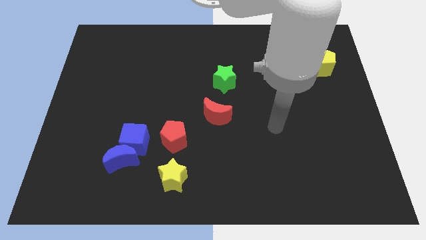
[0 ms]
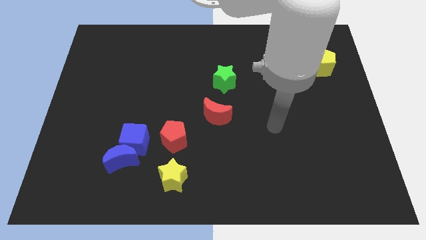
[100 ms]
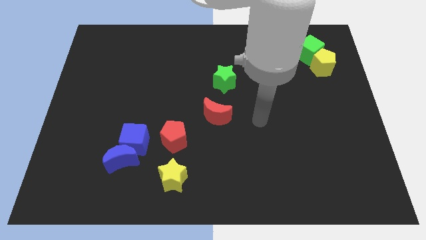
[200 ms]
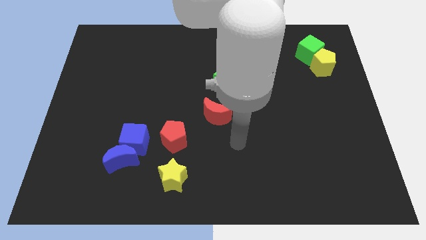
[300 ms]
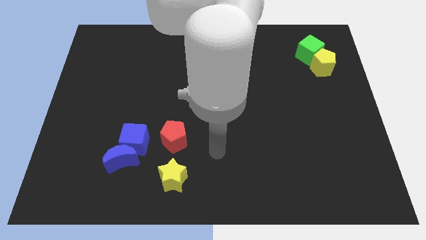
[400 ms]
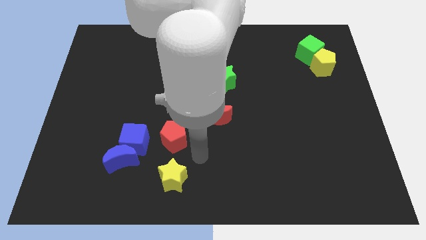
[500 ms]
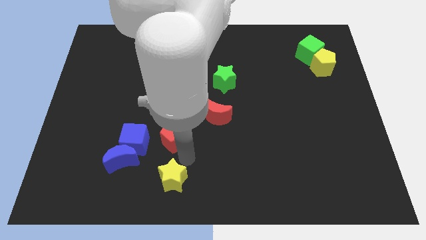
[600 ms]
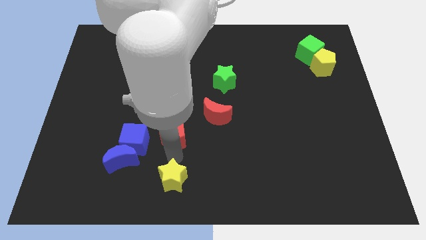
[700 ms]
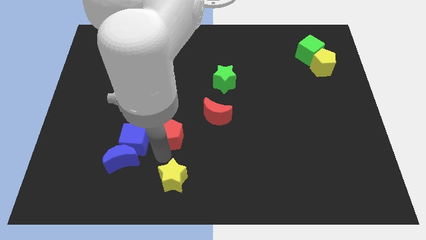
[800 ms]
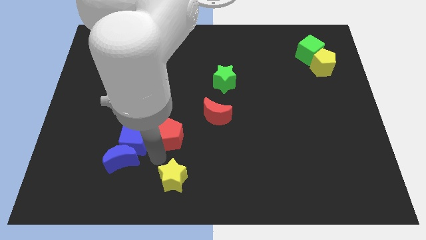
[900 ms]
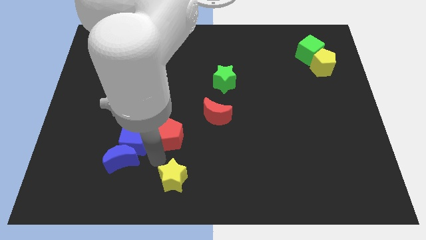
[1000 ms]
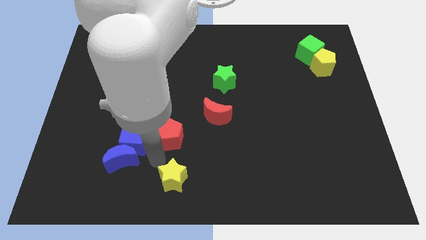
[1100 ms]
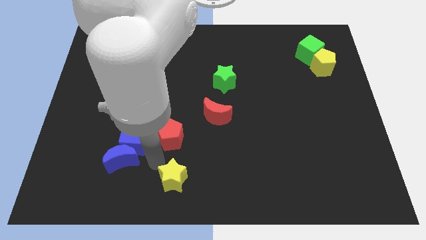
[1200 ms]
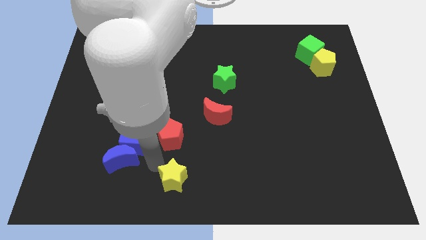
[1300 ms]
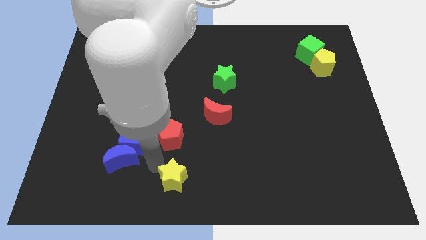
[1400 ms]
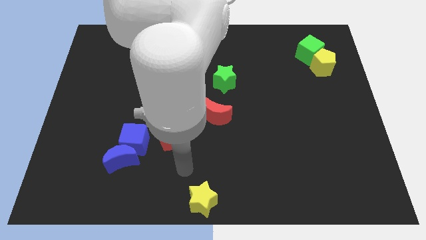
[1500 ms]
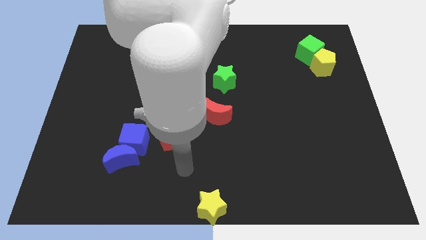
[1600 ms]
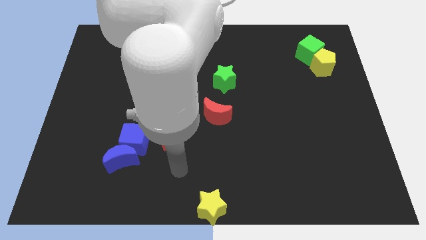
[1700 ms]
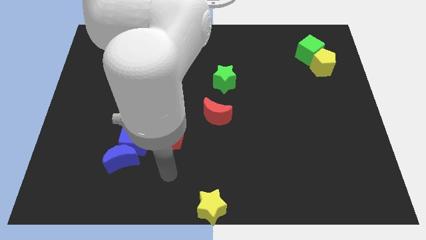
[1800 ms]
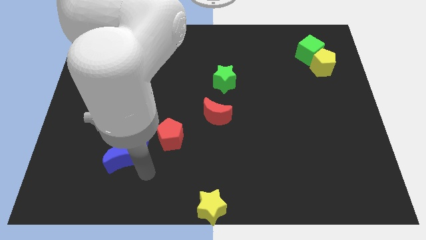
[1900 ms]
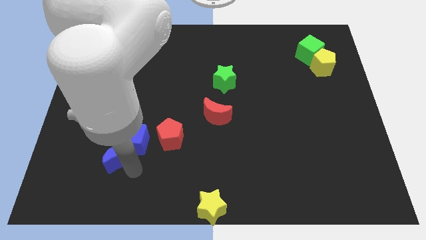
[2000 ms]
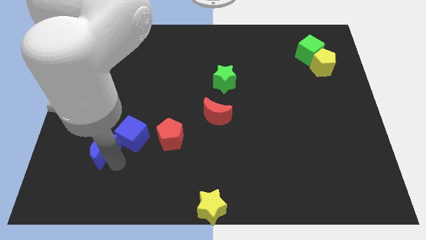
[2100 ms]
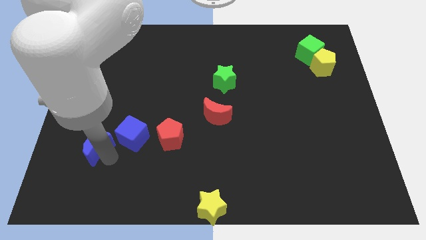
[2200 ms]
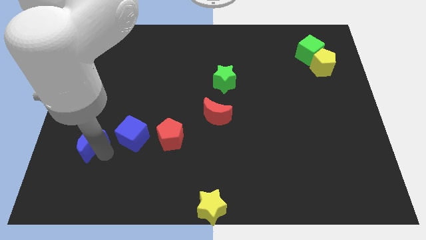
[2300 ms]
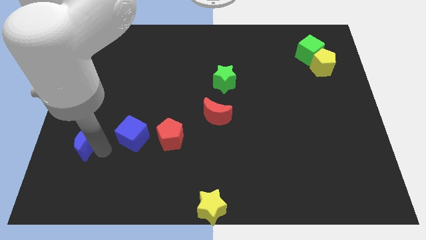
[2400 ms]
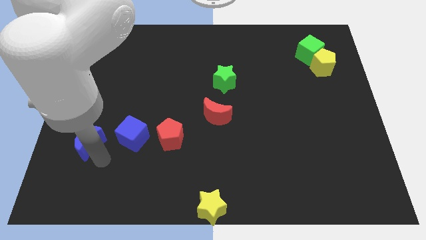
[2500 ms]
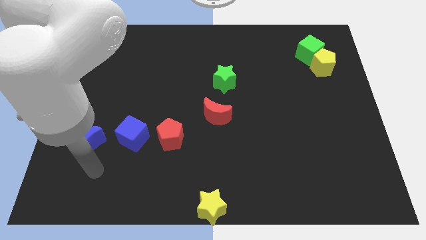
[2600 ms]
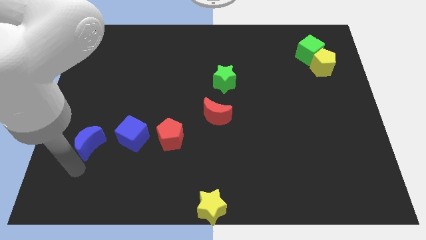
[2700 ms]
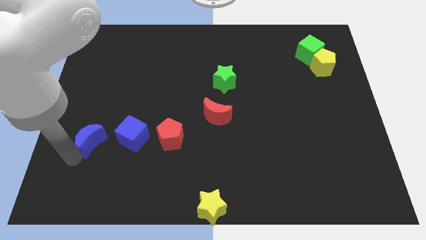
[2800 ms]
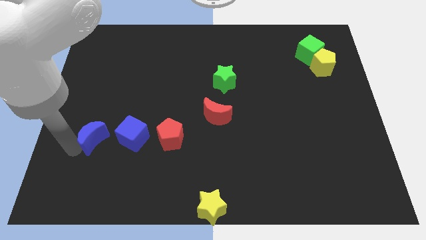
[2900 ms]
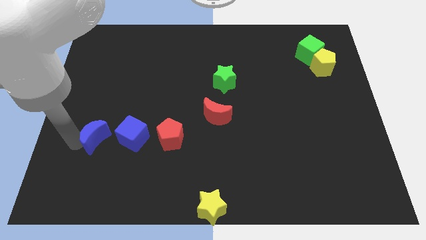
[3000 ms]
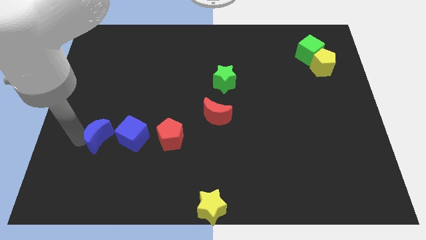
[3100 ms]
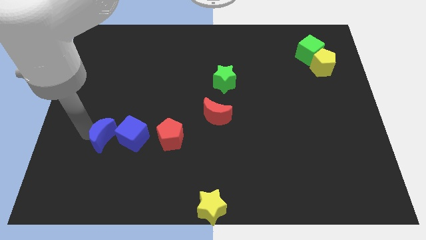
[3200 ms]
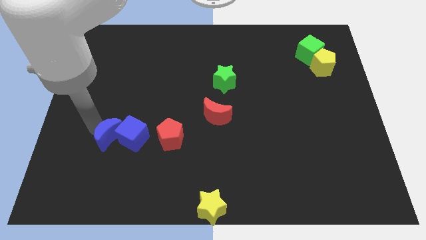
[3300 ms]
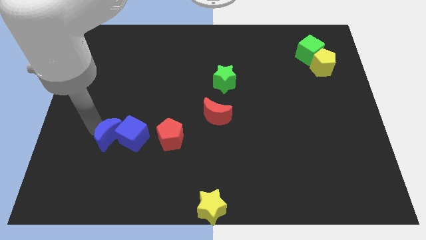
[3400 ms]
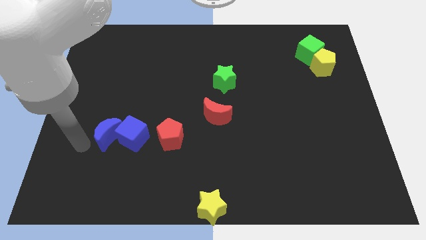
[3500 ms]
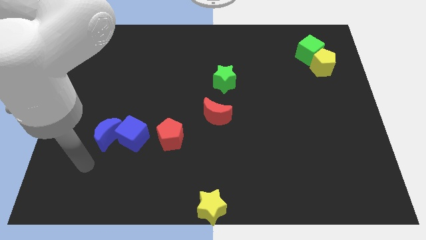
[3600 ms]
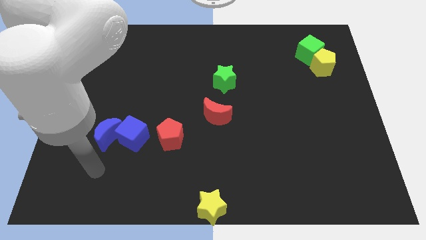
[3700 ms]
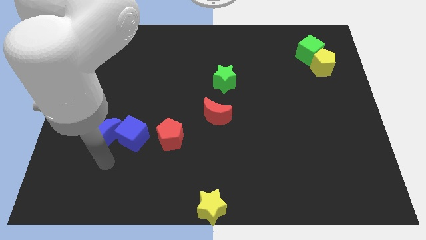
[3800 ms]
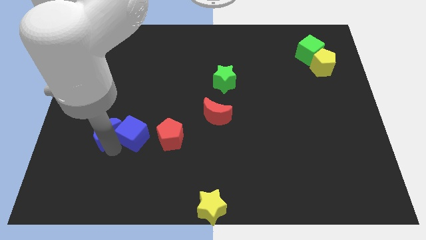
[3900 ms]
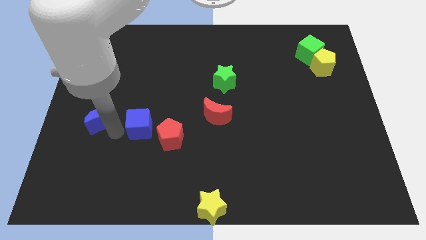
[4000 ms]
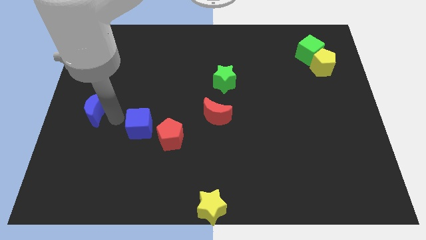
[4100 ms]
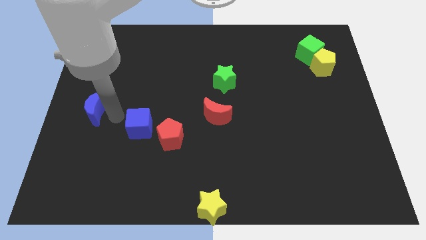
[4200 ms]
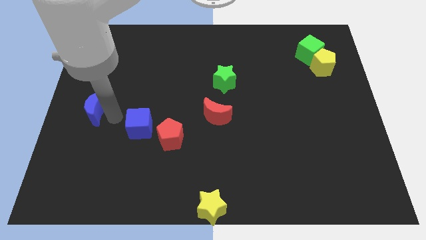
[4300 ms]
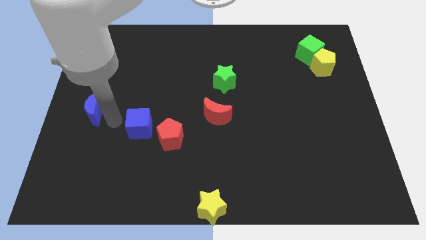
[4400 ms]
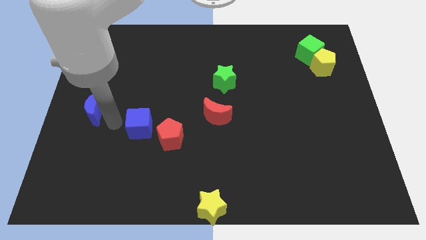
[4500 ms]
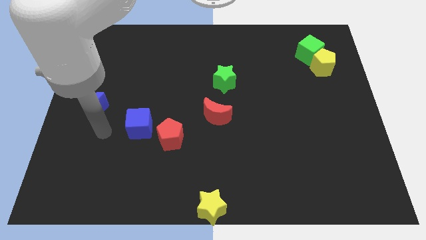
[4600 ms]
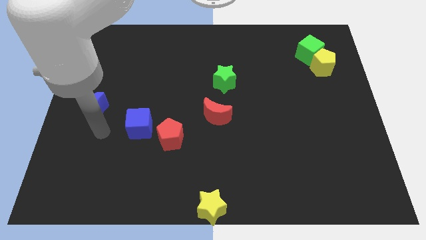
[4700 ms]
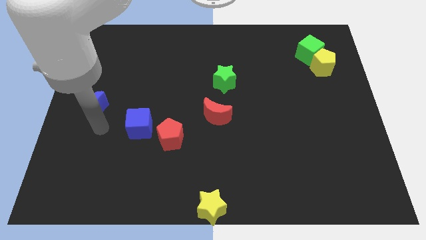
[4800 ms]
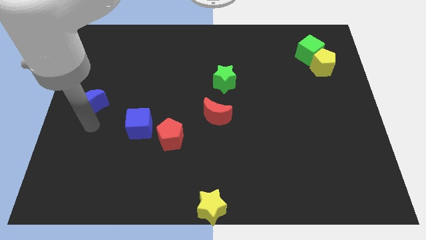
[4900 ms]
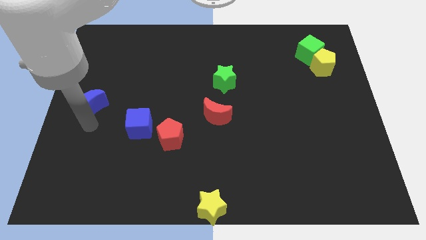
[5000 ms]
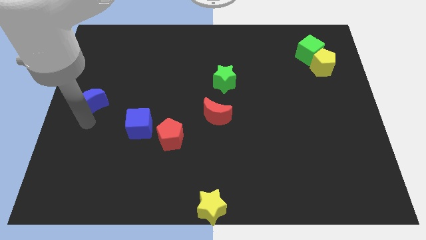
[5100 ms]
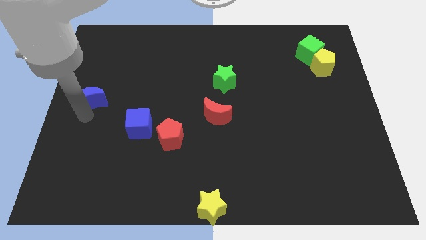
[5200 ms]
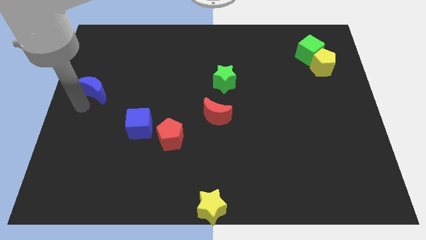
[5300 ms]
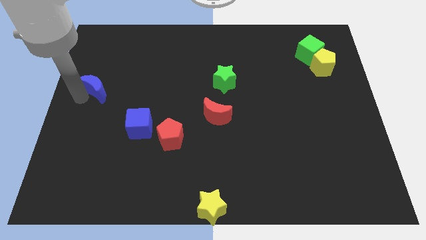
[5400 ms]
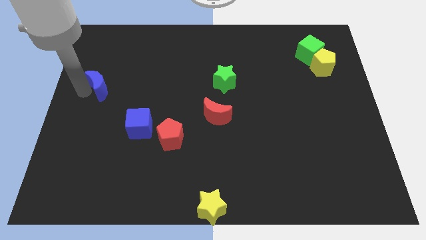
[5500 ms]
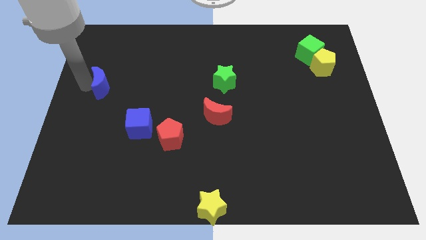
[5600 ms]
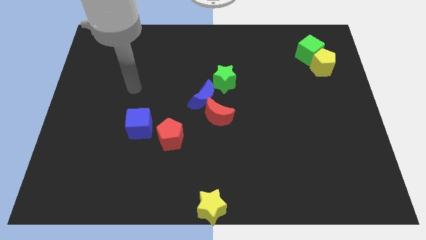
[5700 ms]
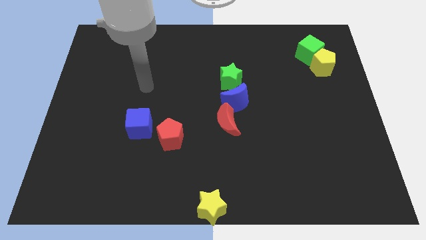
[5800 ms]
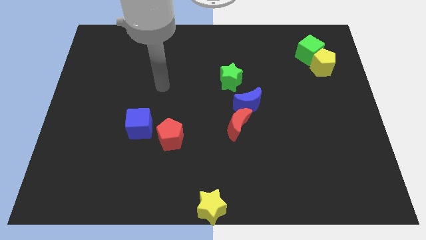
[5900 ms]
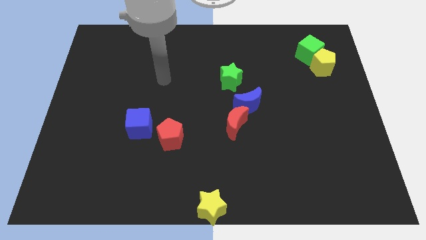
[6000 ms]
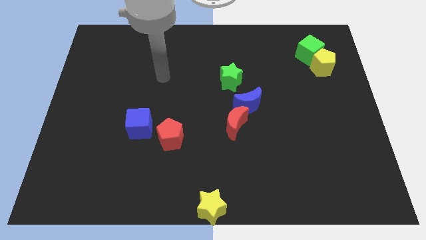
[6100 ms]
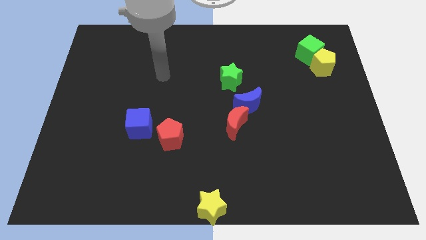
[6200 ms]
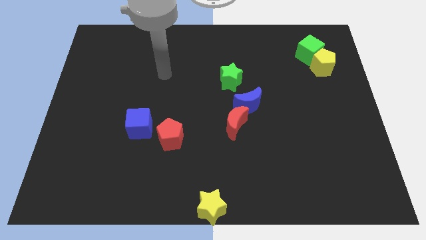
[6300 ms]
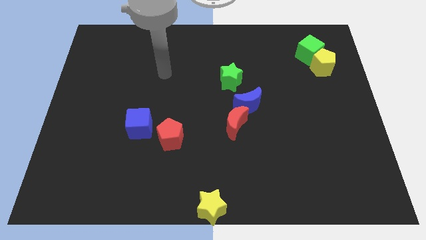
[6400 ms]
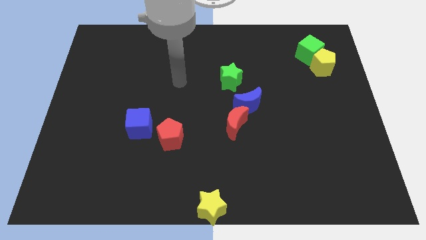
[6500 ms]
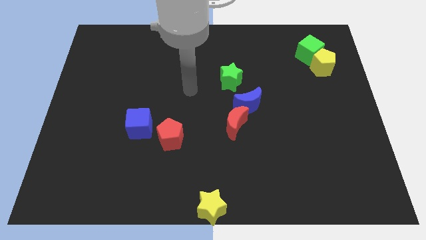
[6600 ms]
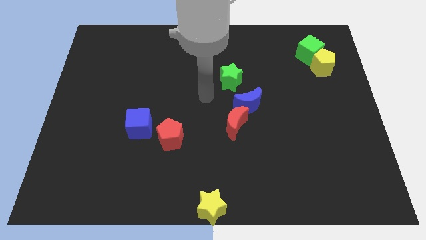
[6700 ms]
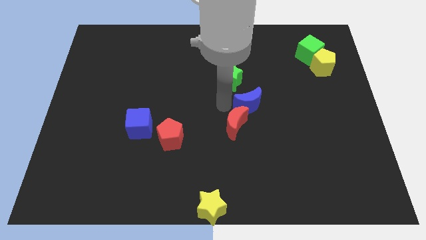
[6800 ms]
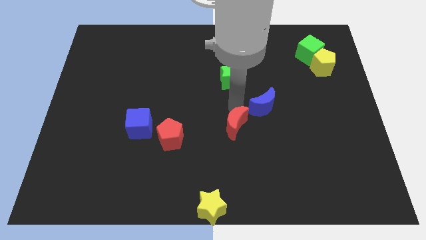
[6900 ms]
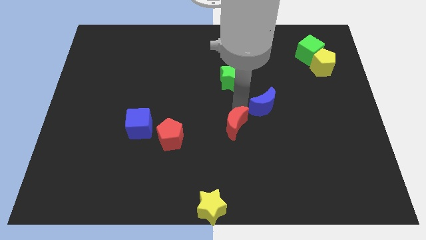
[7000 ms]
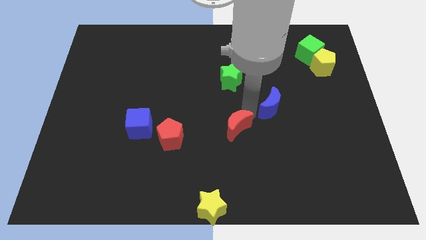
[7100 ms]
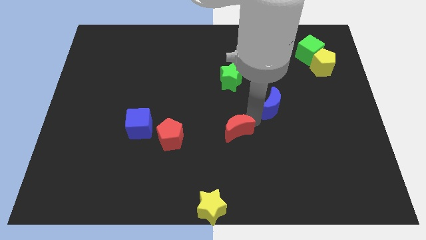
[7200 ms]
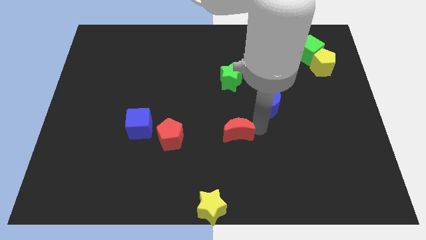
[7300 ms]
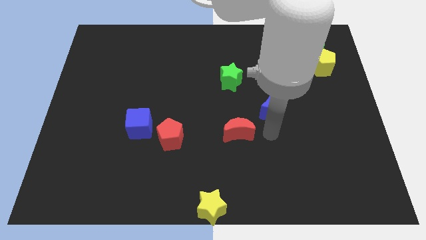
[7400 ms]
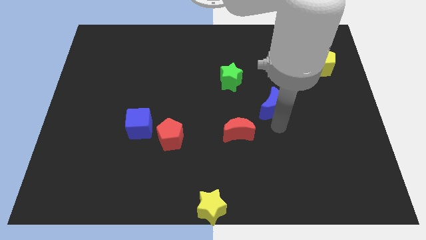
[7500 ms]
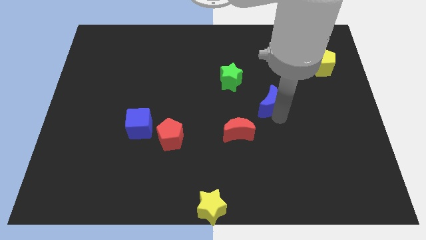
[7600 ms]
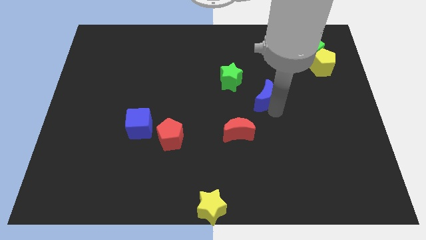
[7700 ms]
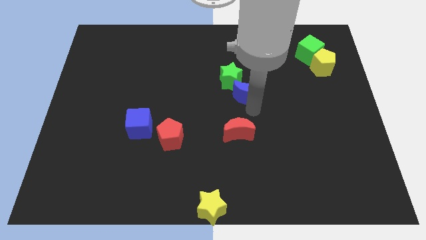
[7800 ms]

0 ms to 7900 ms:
put the blue moon next to the green cube

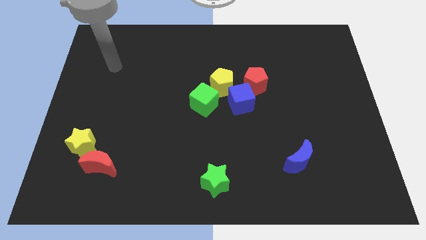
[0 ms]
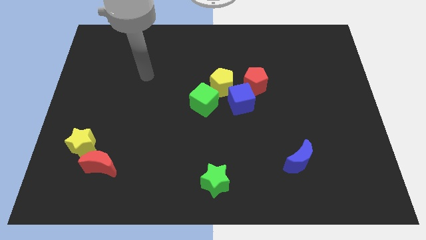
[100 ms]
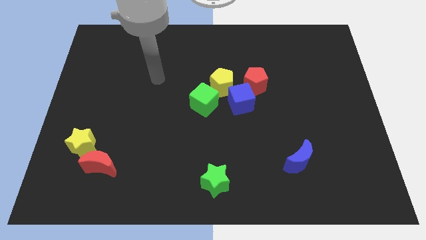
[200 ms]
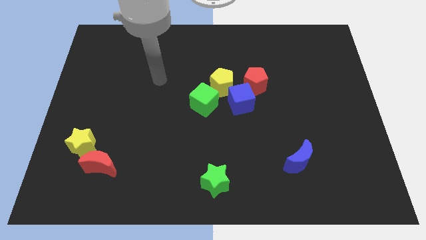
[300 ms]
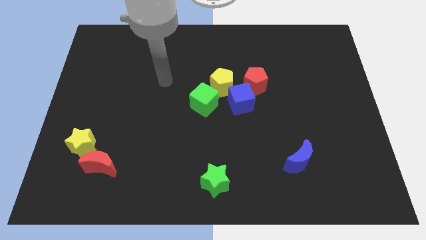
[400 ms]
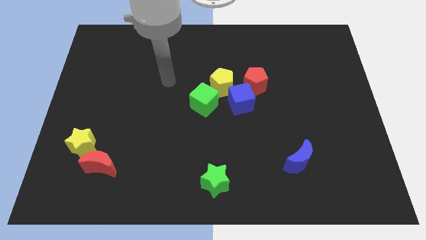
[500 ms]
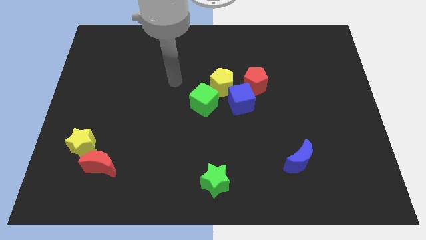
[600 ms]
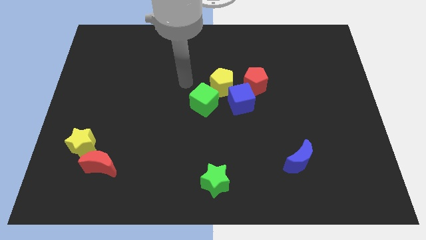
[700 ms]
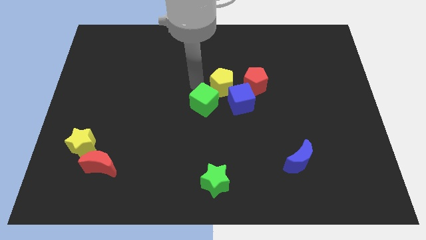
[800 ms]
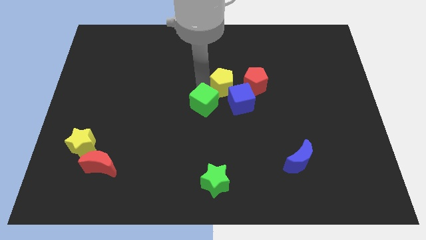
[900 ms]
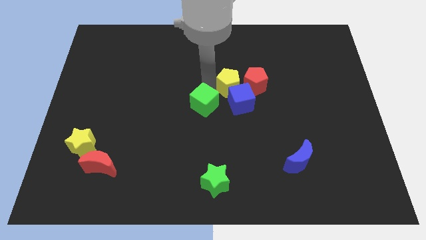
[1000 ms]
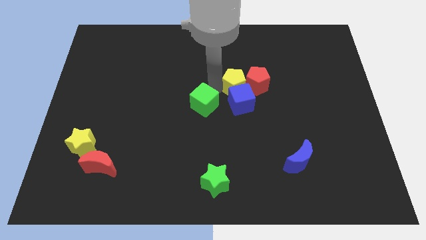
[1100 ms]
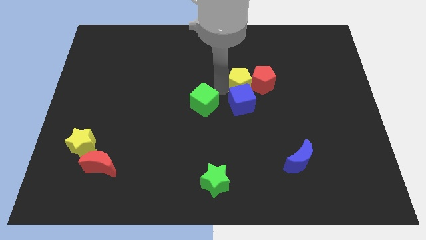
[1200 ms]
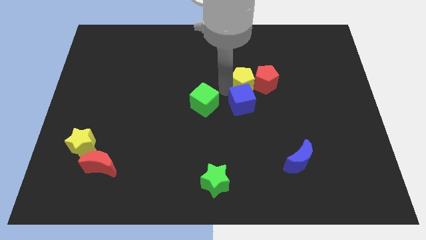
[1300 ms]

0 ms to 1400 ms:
slide the yellow pentagon close to the red pentagon
